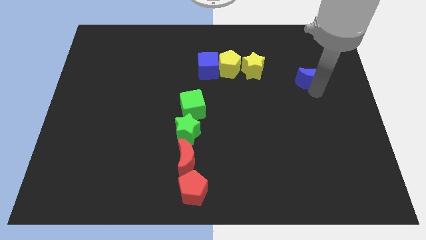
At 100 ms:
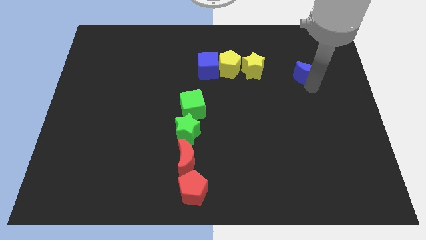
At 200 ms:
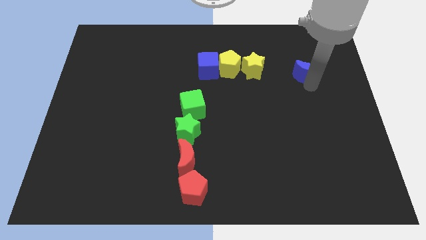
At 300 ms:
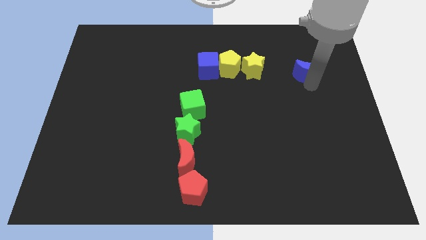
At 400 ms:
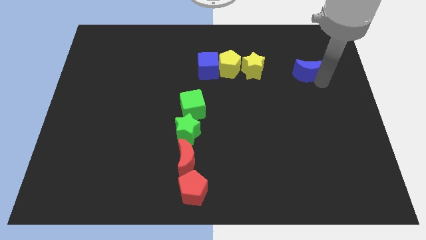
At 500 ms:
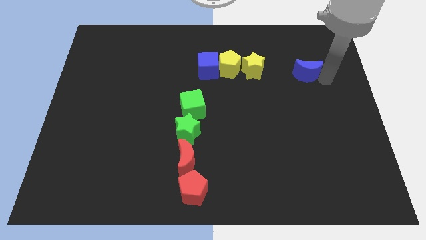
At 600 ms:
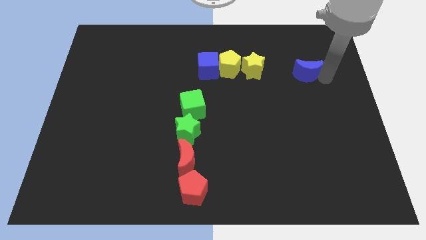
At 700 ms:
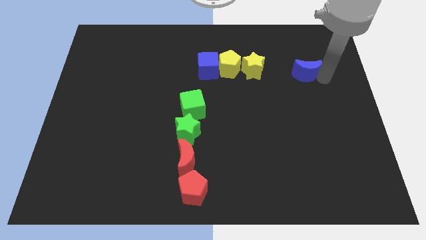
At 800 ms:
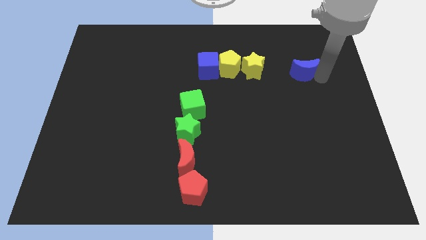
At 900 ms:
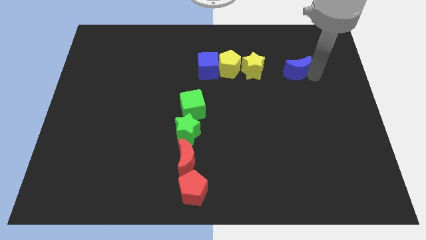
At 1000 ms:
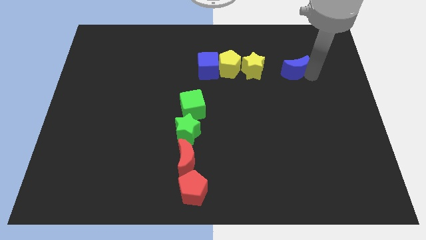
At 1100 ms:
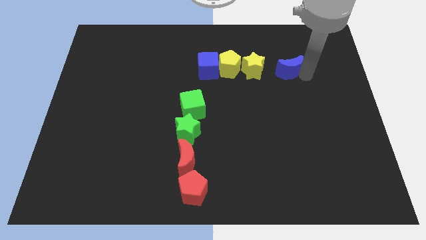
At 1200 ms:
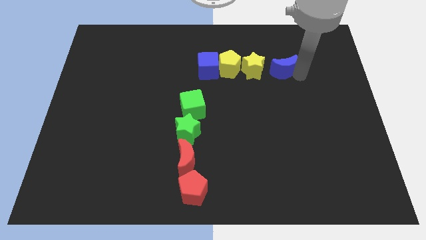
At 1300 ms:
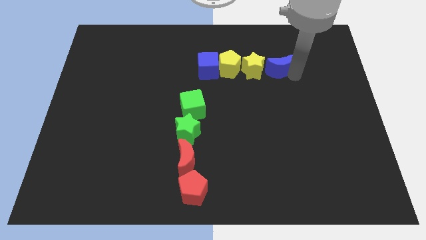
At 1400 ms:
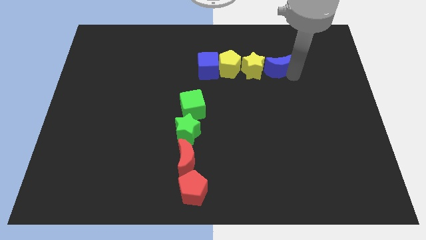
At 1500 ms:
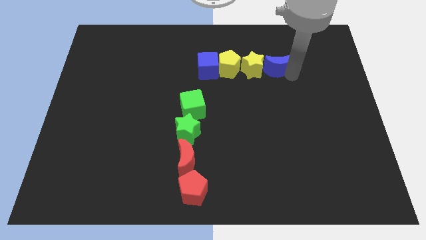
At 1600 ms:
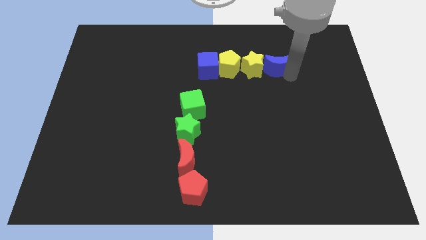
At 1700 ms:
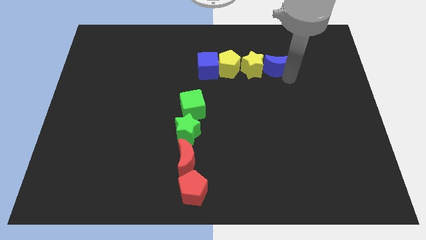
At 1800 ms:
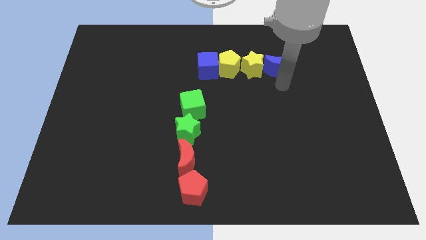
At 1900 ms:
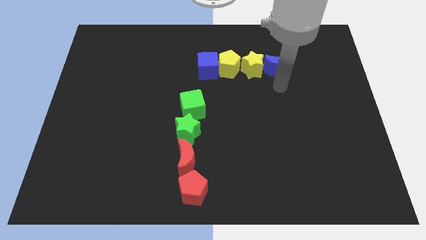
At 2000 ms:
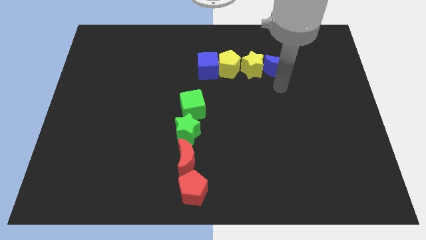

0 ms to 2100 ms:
place the blue moon to the right of the yellow star

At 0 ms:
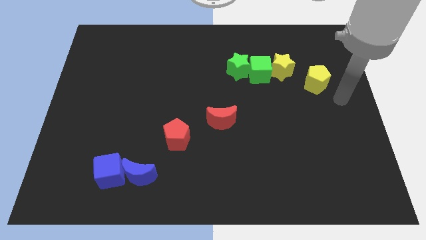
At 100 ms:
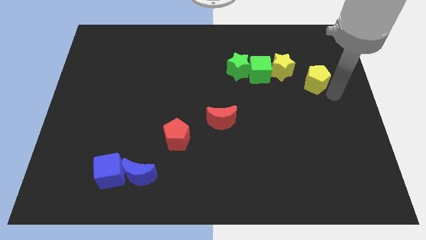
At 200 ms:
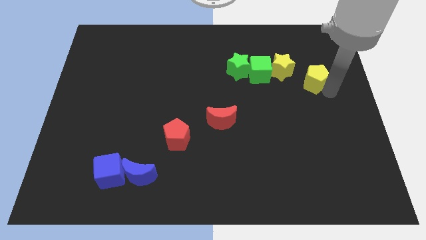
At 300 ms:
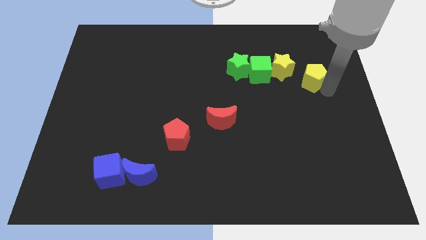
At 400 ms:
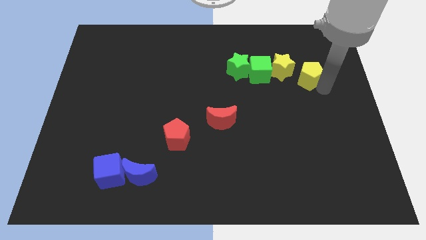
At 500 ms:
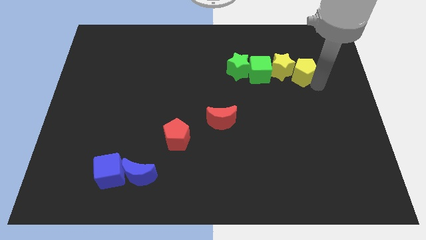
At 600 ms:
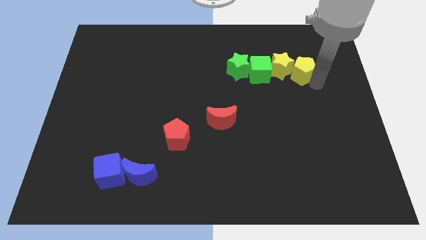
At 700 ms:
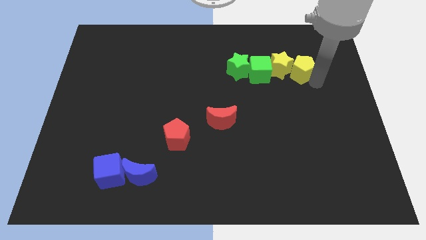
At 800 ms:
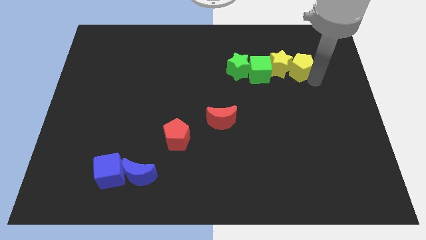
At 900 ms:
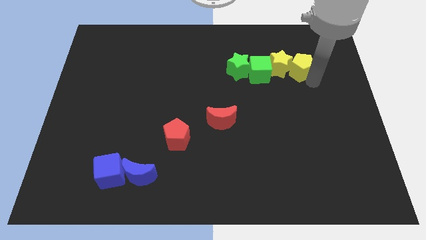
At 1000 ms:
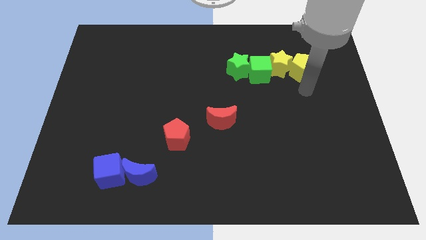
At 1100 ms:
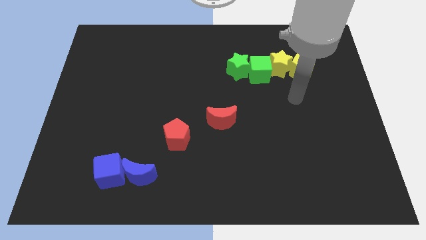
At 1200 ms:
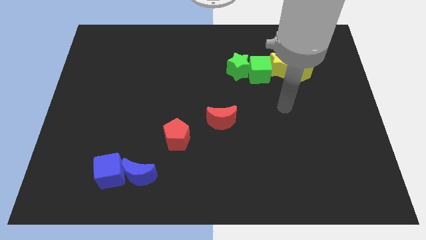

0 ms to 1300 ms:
move yellow pentagon in to yellow star

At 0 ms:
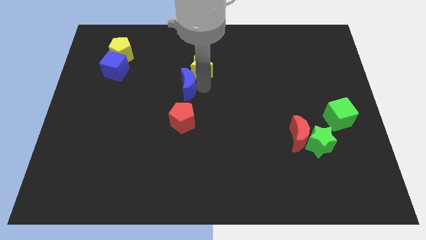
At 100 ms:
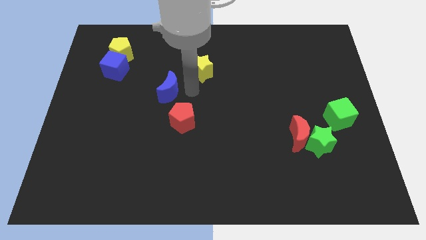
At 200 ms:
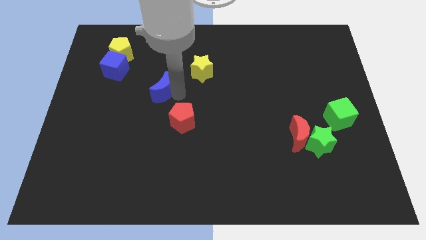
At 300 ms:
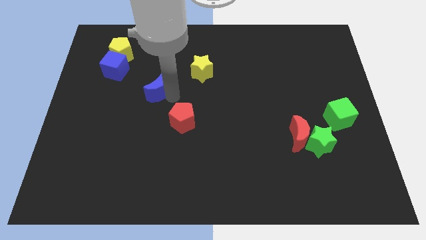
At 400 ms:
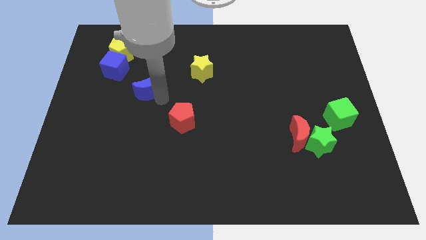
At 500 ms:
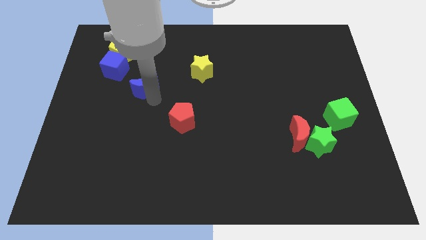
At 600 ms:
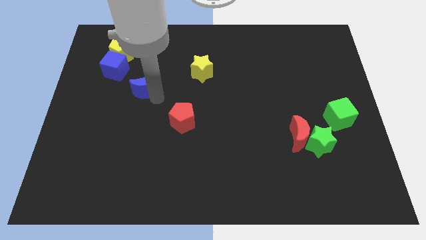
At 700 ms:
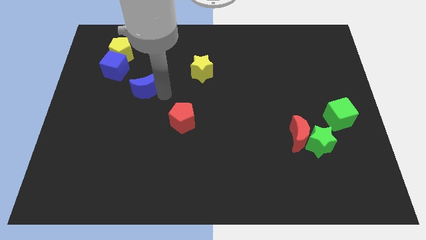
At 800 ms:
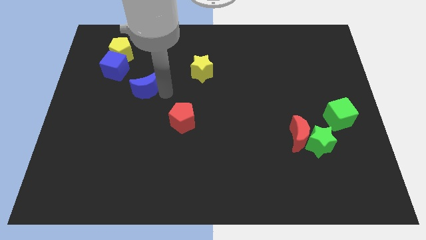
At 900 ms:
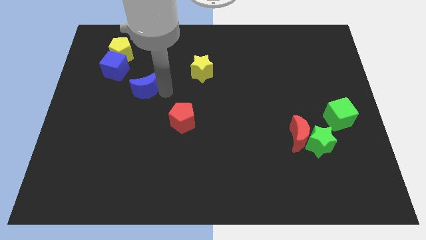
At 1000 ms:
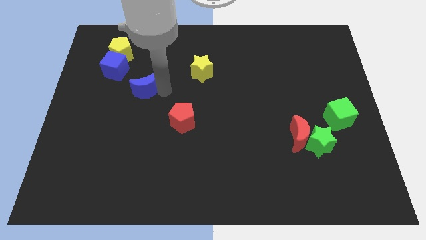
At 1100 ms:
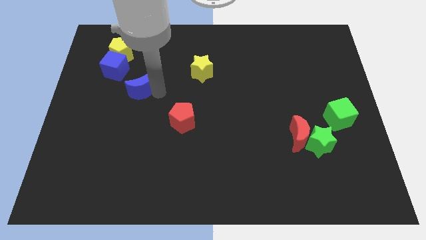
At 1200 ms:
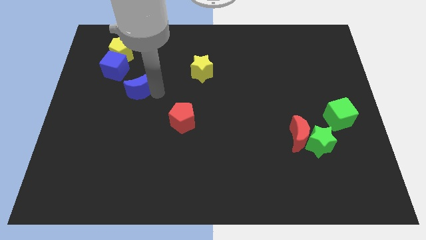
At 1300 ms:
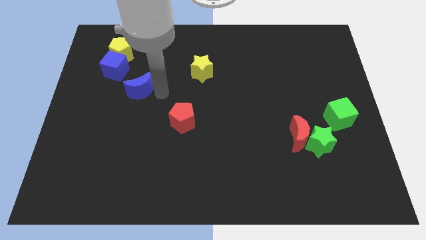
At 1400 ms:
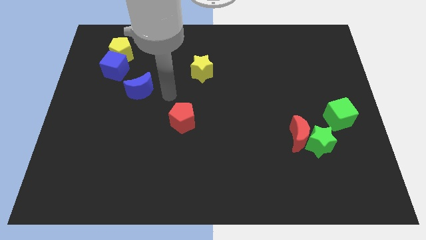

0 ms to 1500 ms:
move the blue crescent towards blue cube

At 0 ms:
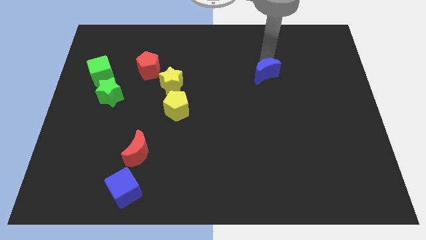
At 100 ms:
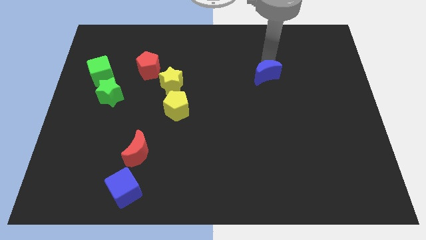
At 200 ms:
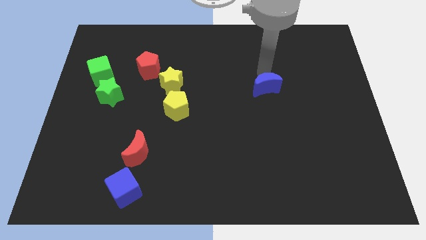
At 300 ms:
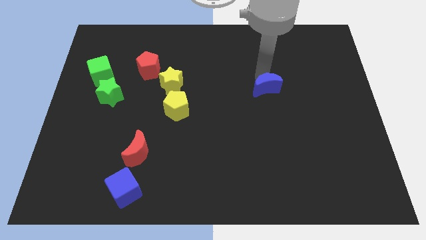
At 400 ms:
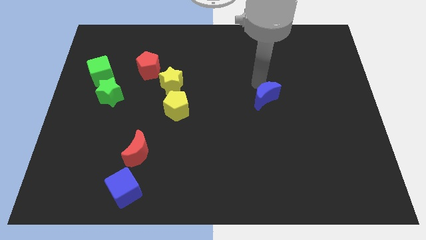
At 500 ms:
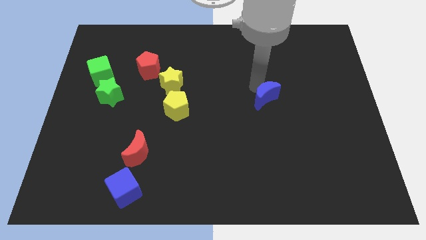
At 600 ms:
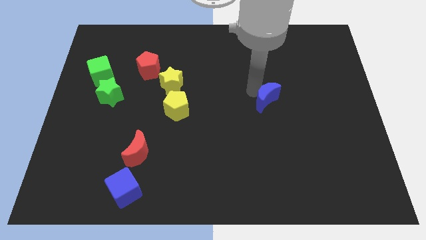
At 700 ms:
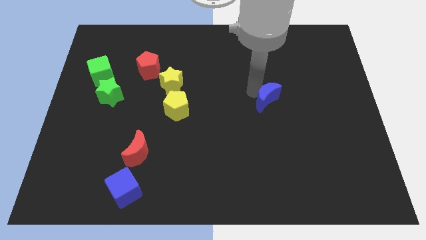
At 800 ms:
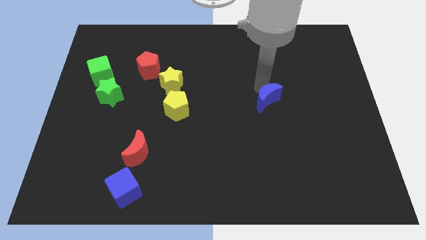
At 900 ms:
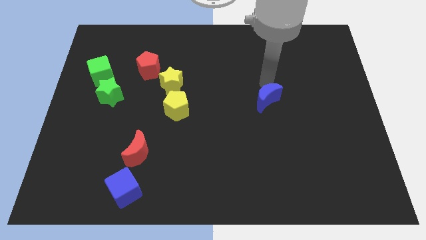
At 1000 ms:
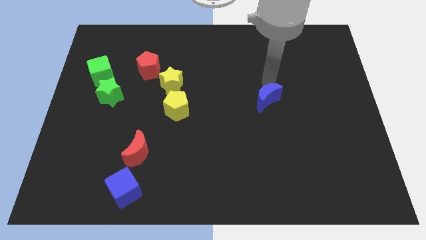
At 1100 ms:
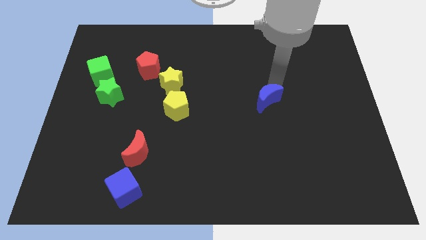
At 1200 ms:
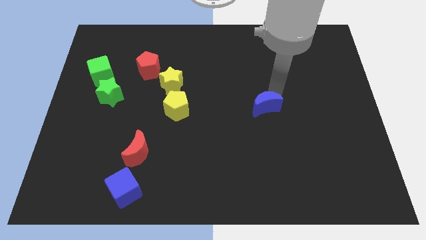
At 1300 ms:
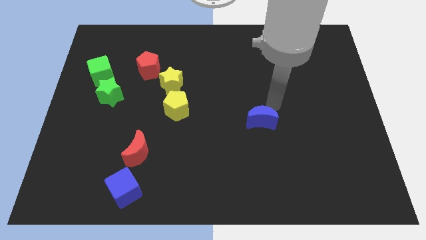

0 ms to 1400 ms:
place the blue crescent horizontally to the right side of the yellow pentagon

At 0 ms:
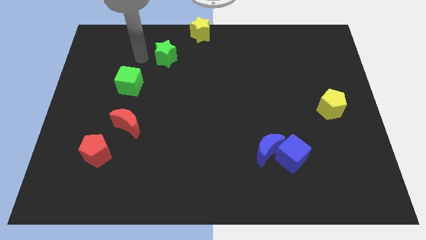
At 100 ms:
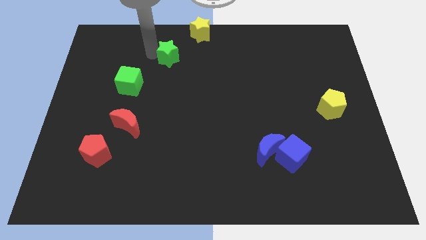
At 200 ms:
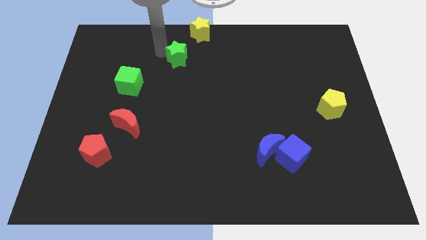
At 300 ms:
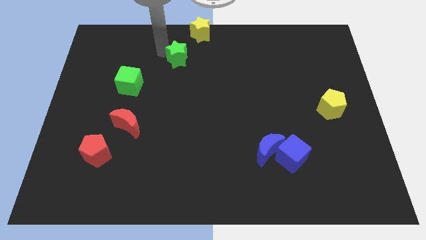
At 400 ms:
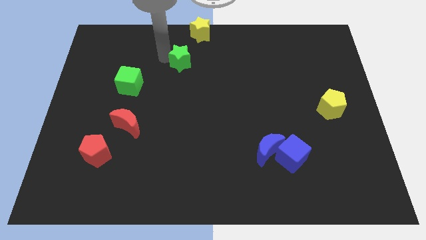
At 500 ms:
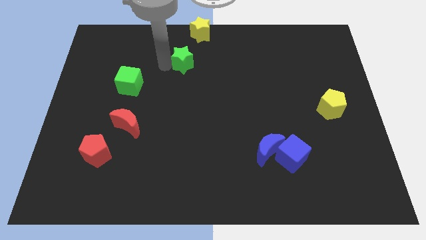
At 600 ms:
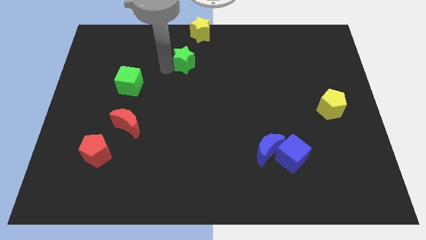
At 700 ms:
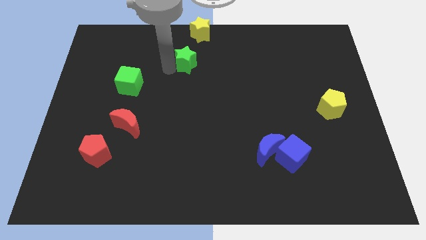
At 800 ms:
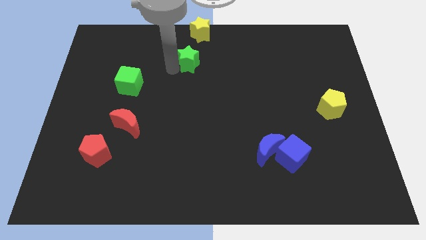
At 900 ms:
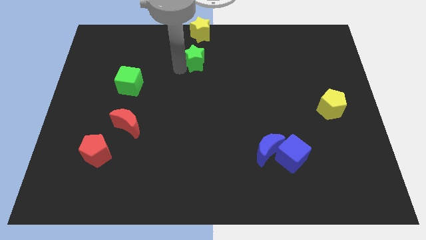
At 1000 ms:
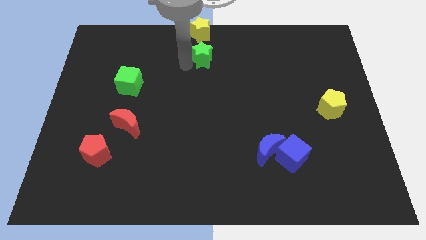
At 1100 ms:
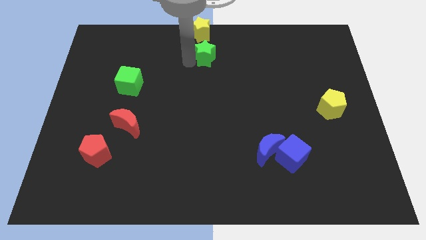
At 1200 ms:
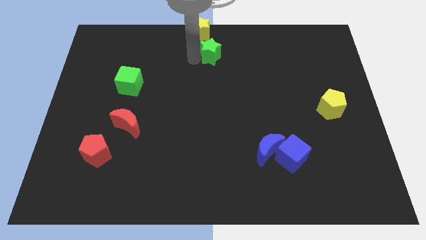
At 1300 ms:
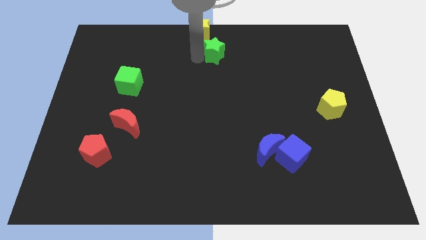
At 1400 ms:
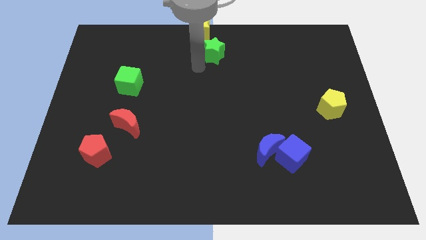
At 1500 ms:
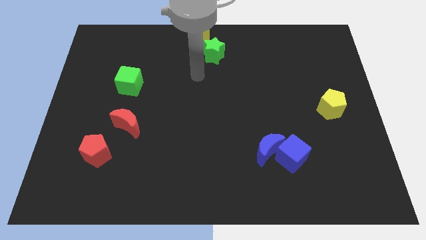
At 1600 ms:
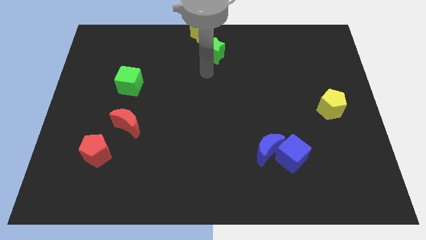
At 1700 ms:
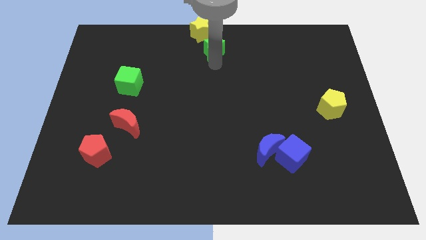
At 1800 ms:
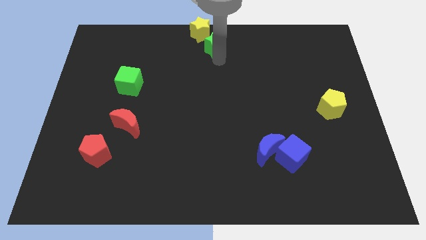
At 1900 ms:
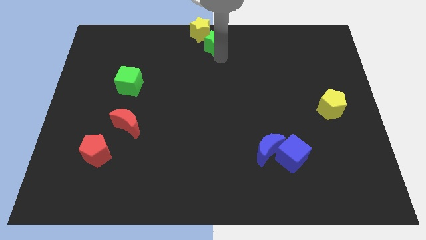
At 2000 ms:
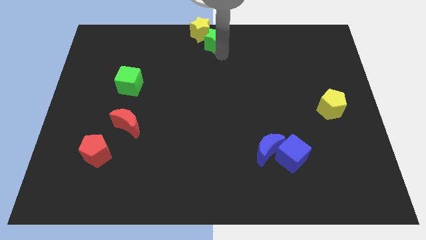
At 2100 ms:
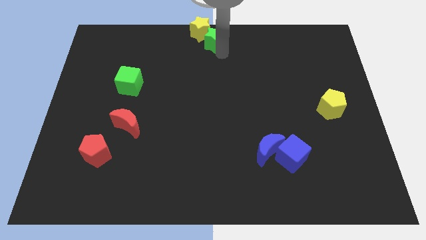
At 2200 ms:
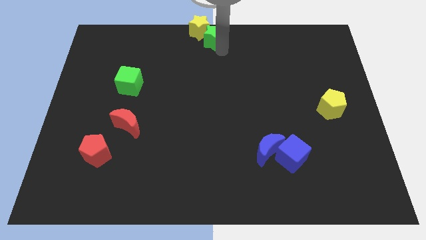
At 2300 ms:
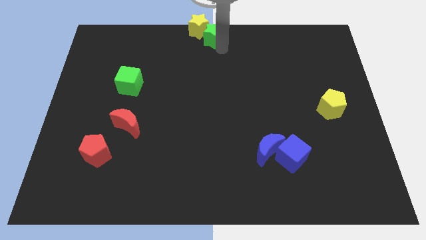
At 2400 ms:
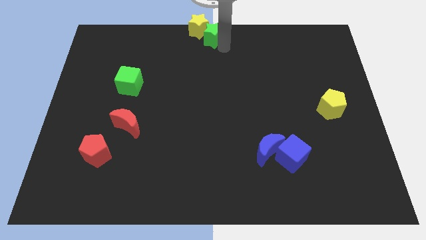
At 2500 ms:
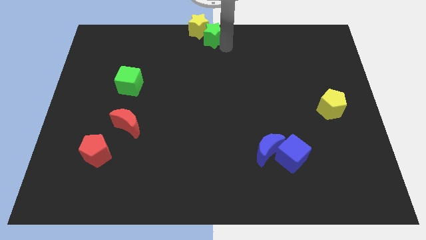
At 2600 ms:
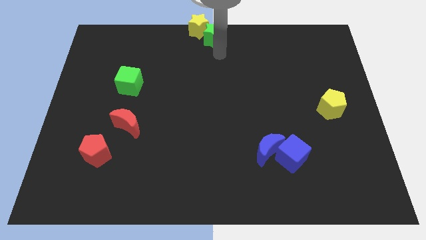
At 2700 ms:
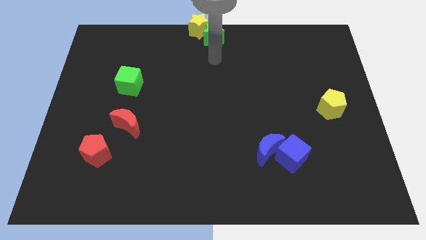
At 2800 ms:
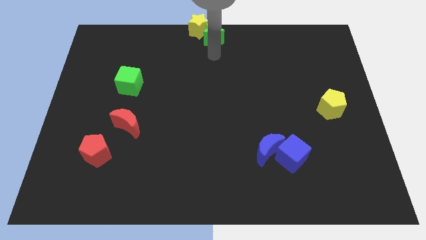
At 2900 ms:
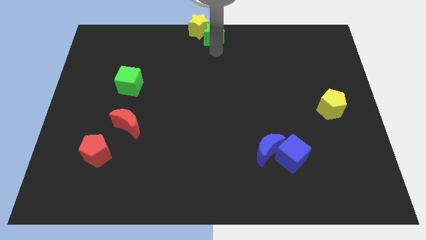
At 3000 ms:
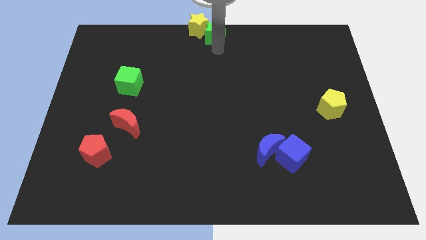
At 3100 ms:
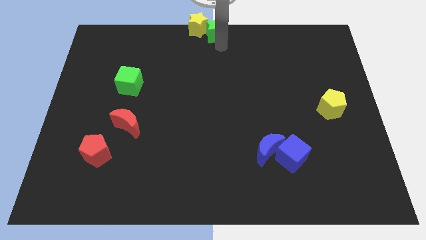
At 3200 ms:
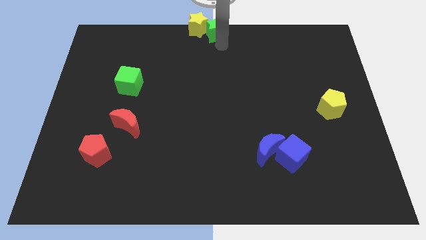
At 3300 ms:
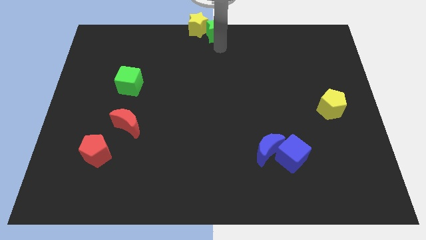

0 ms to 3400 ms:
push the green star to the right of the yellow star
